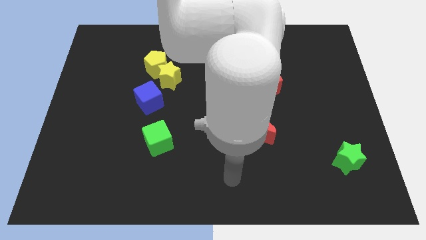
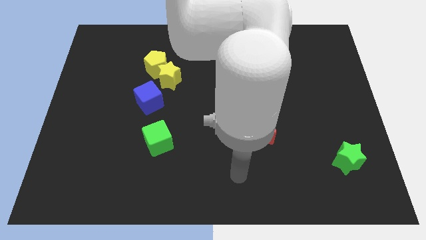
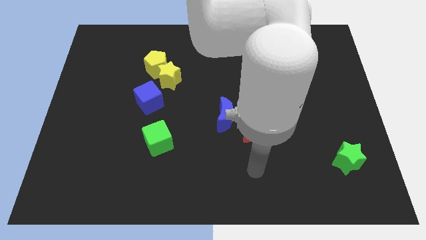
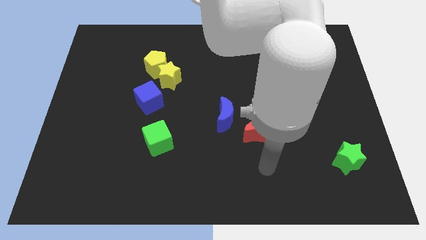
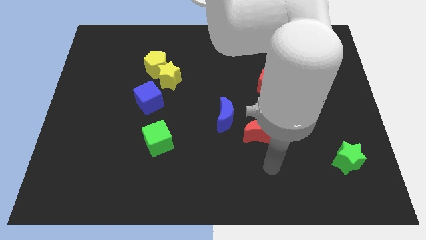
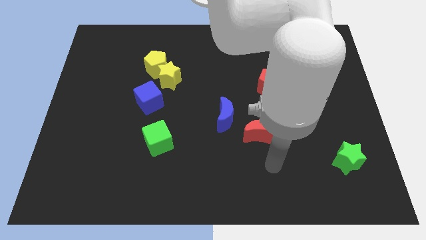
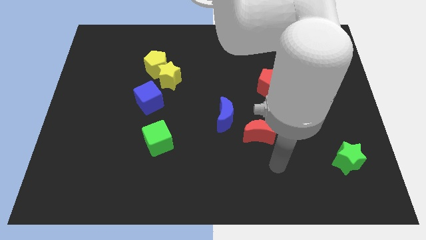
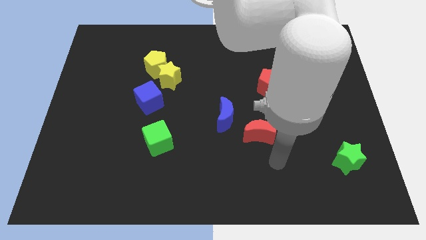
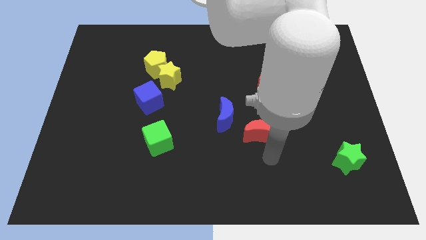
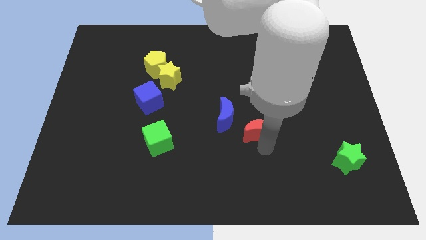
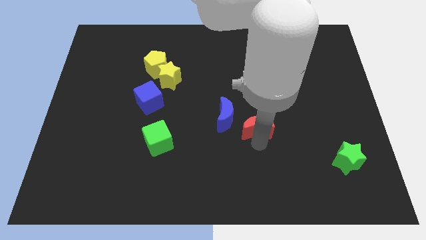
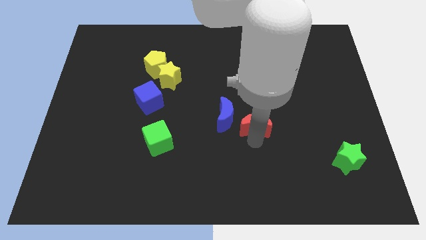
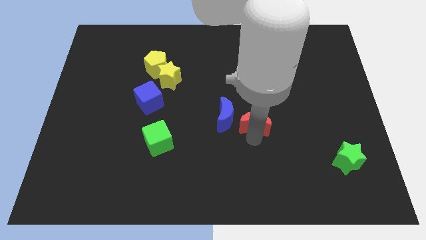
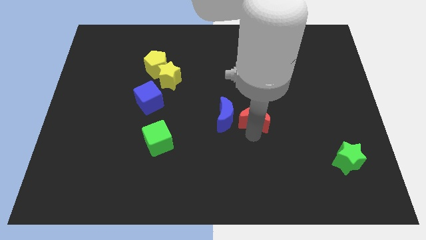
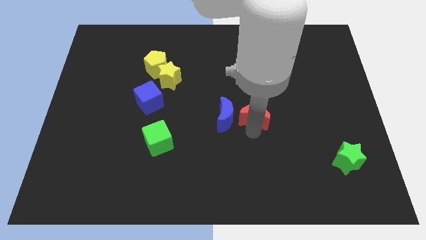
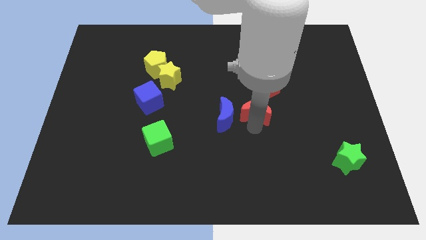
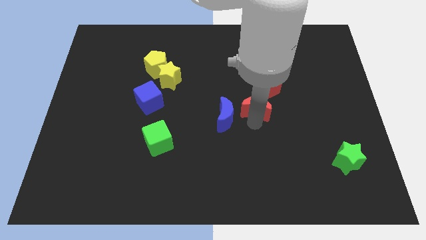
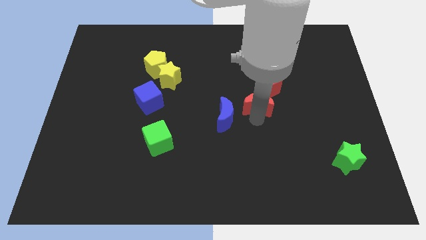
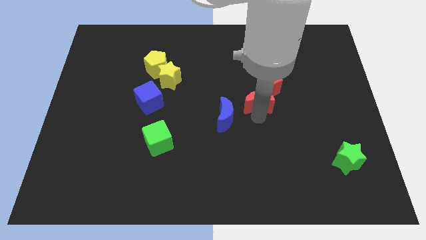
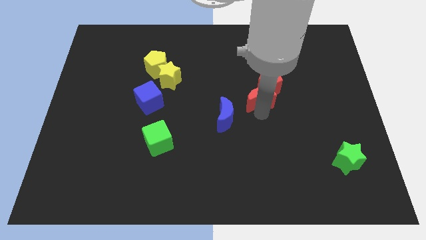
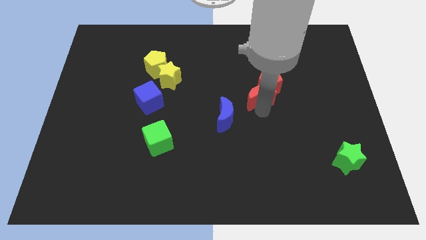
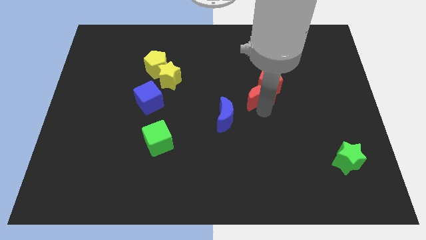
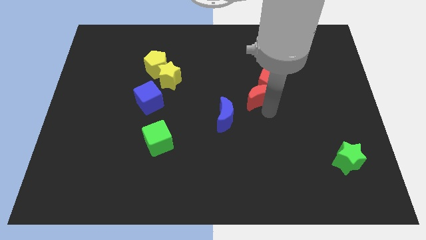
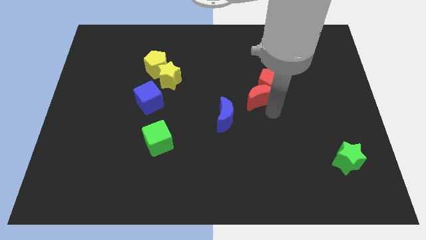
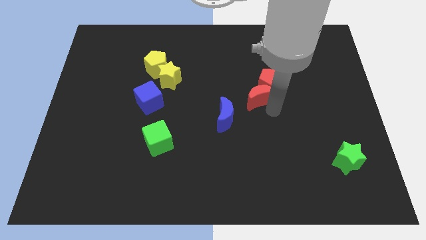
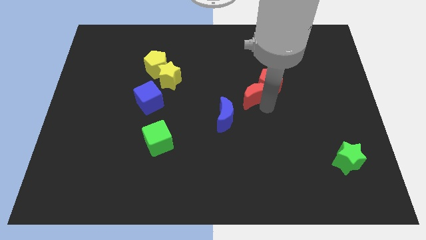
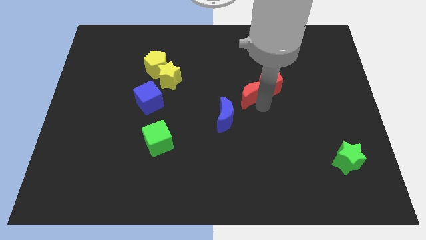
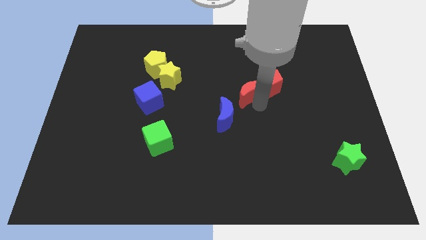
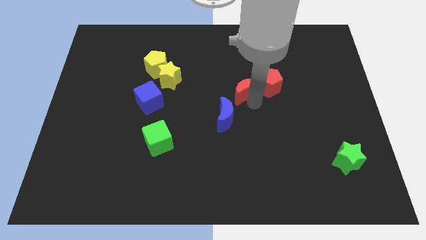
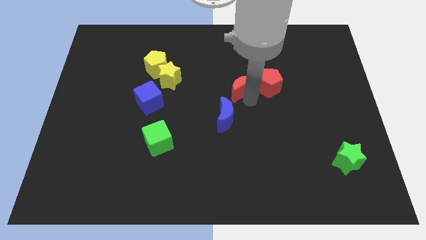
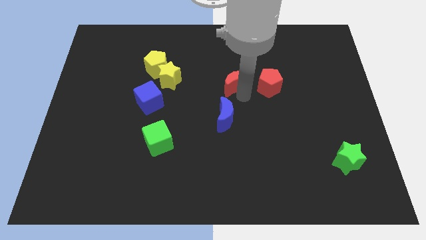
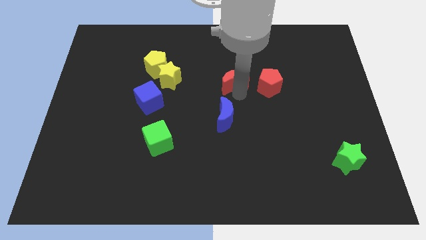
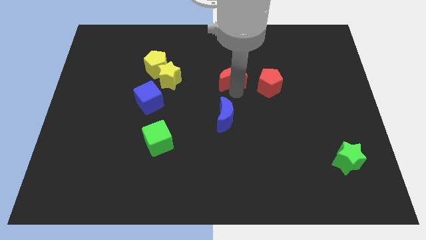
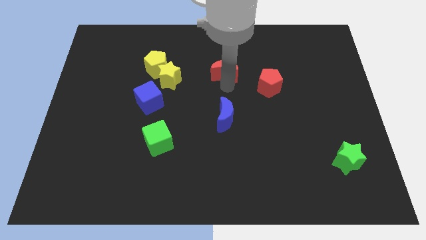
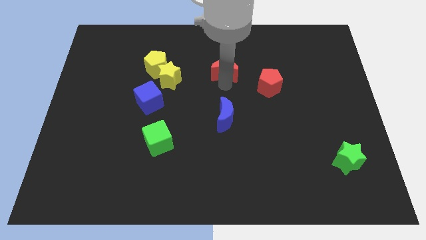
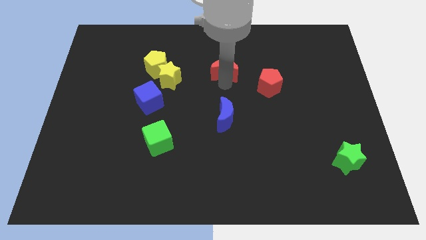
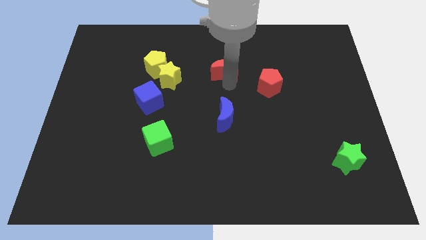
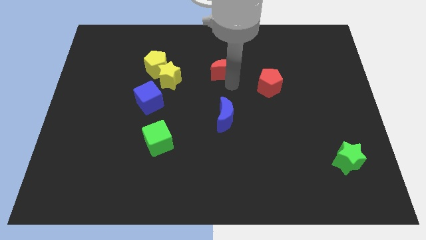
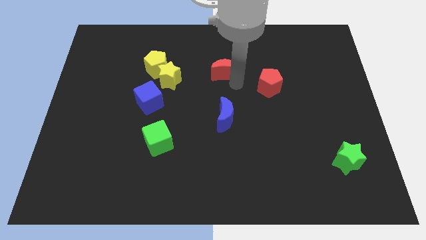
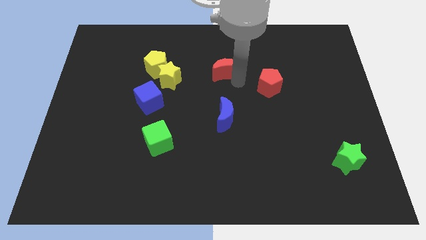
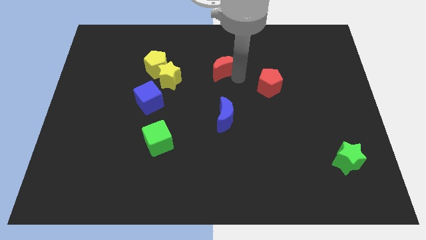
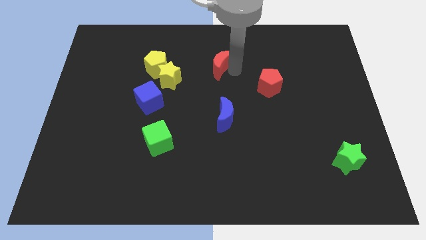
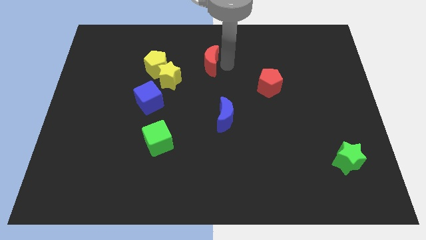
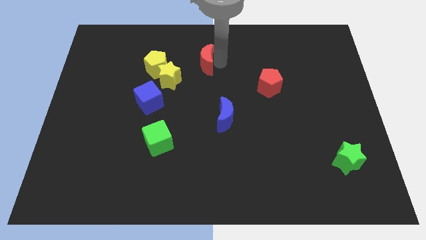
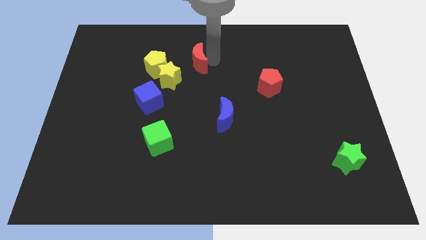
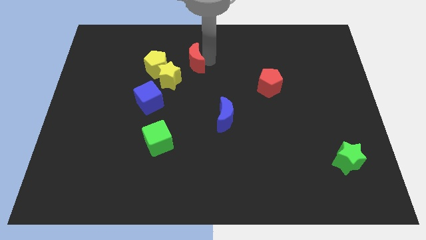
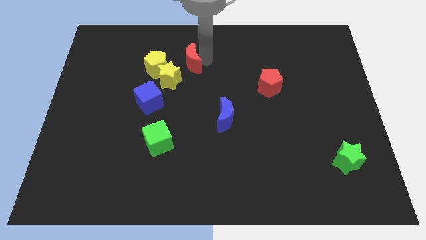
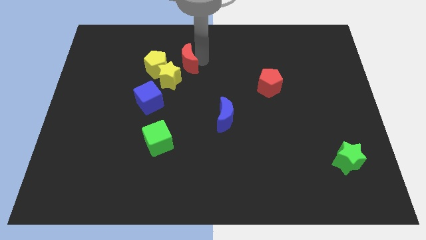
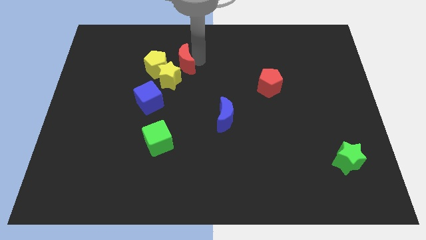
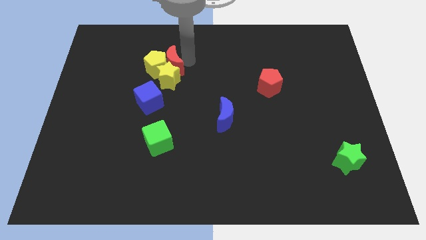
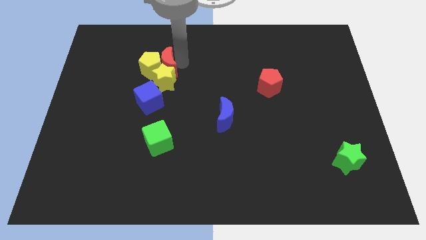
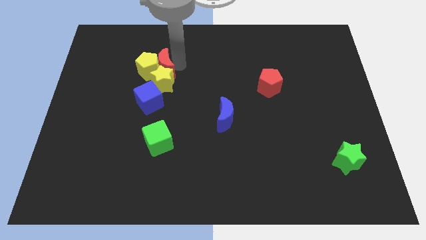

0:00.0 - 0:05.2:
put the red moon to the yellow star

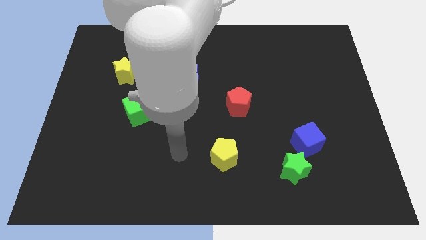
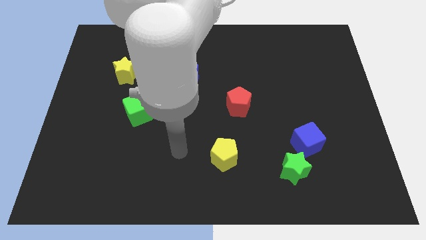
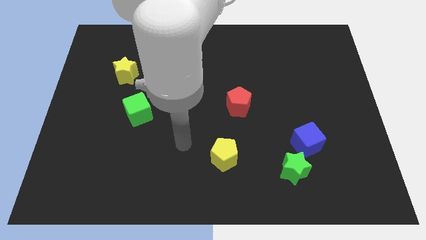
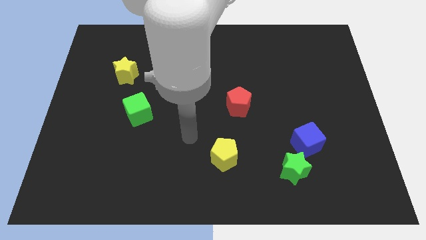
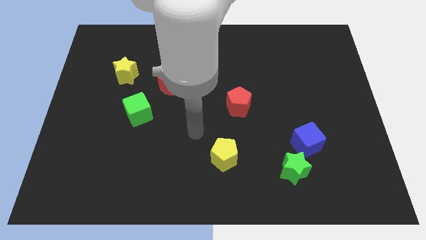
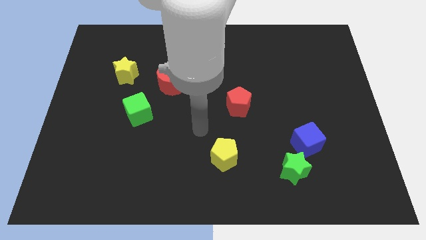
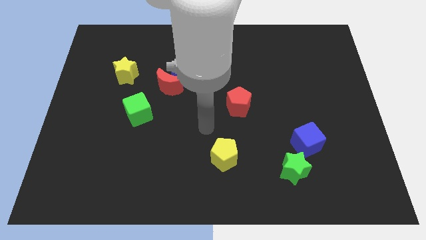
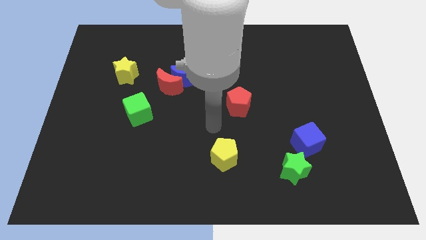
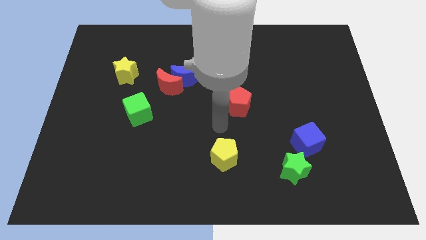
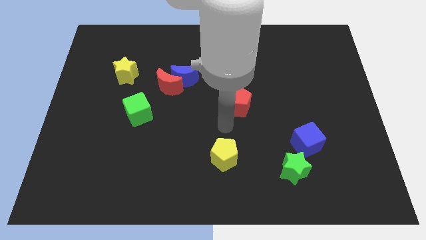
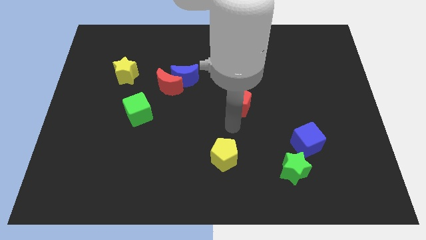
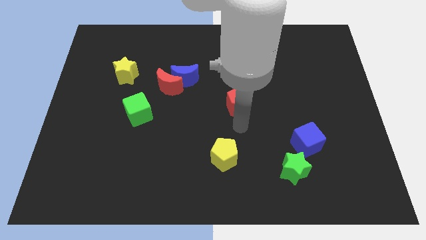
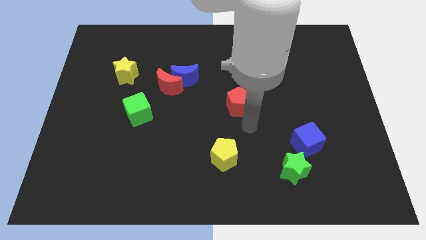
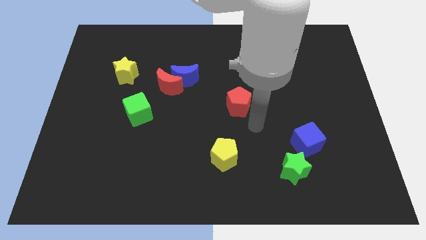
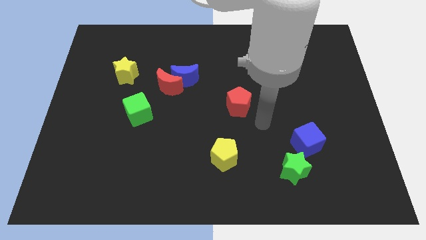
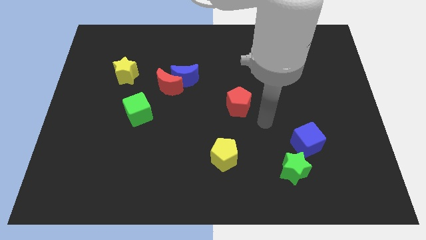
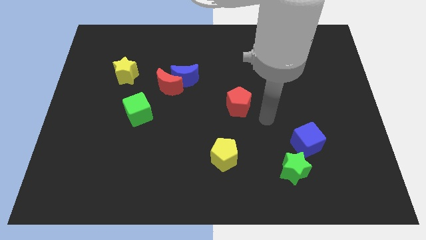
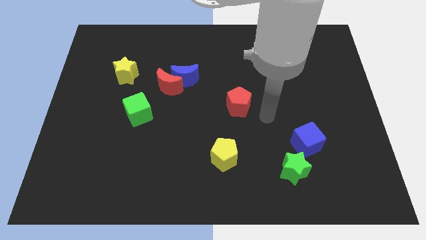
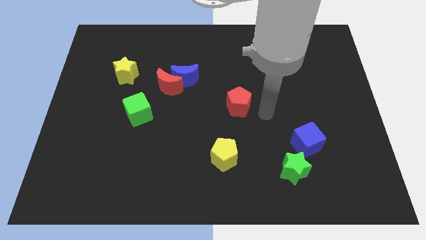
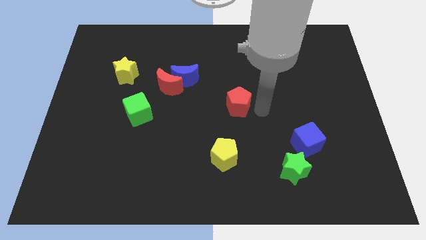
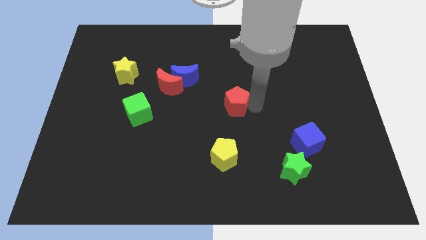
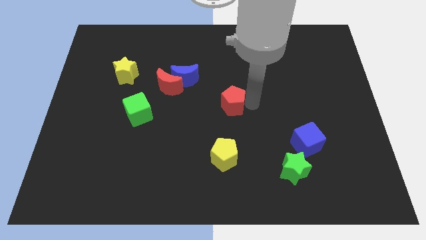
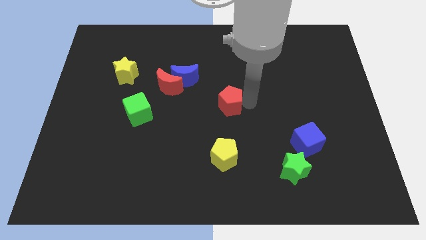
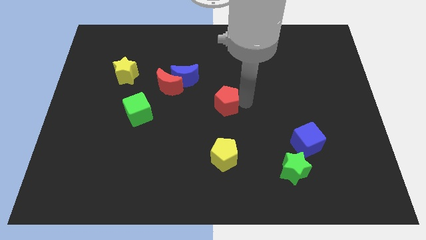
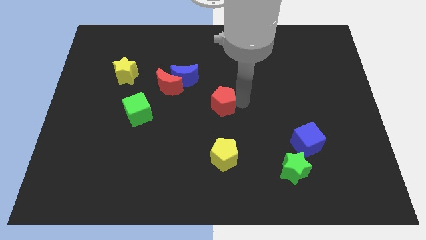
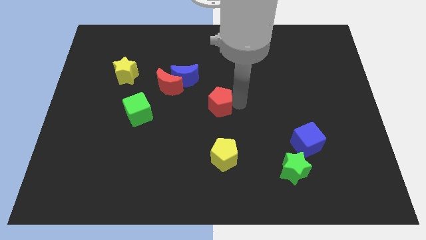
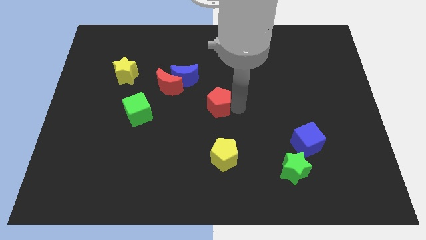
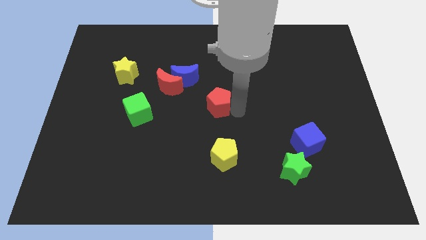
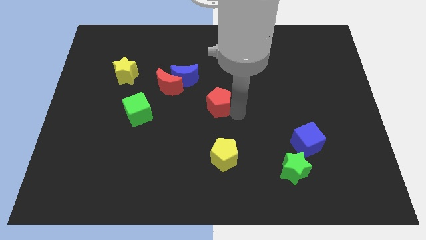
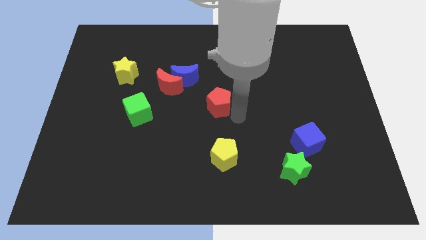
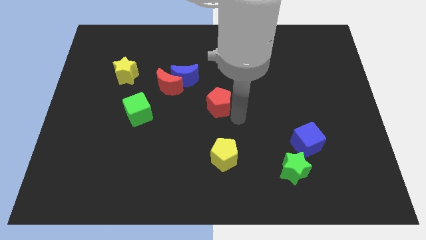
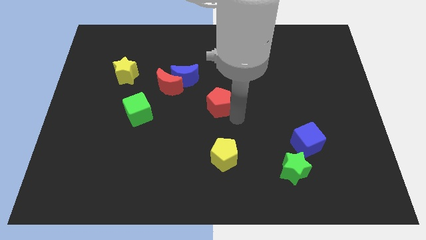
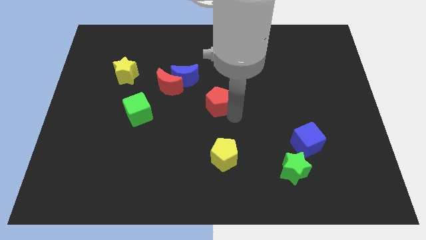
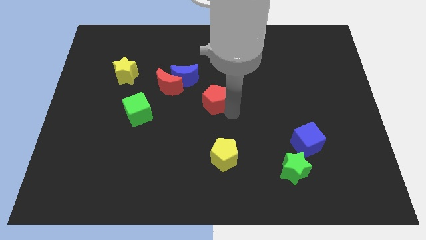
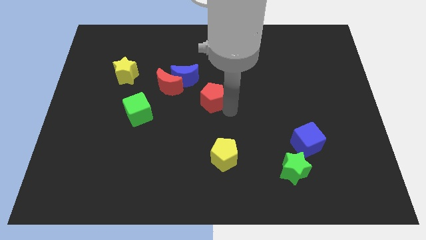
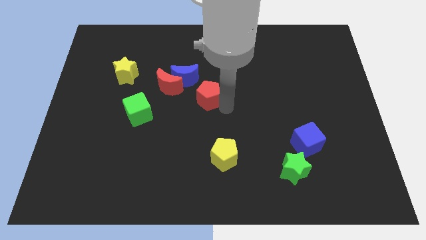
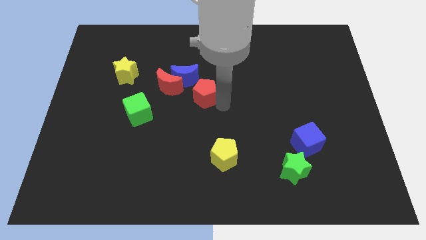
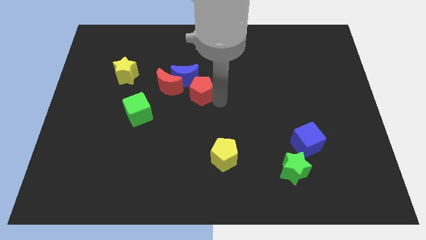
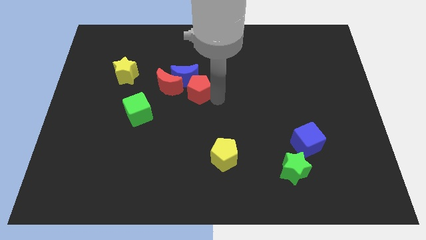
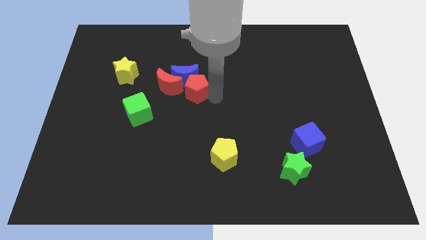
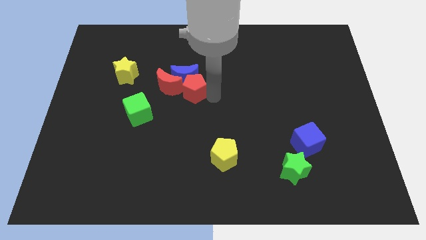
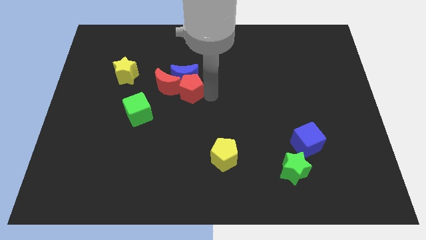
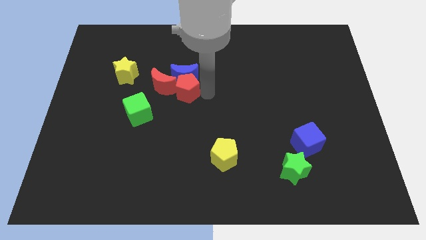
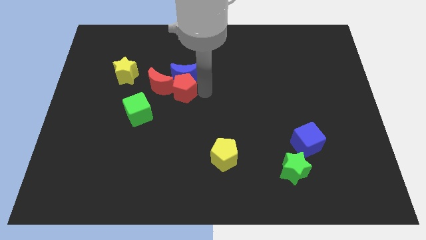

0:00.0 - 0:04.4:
slide the red pentagon close to the red moon
